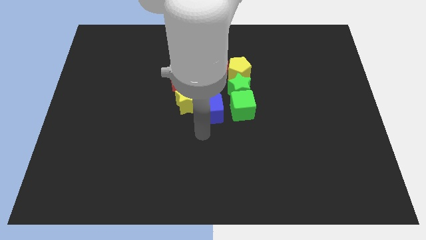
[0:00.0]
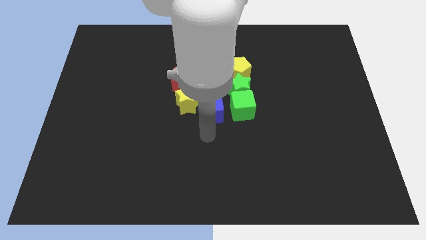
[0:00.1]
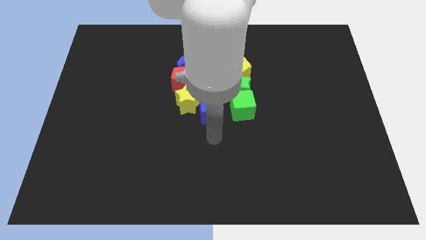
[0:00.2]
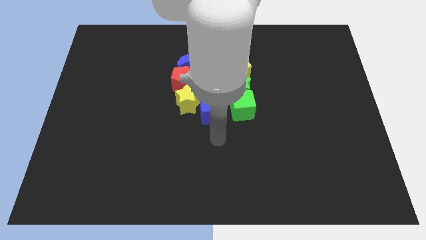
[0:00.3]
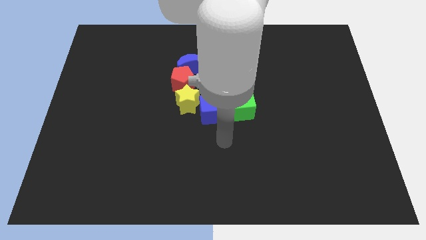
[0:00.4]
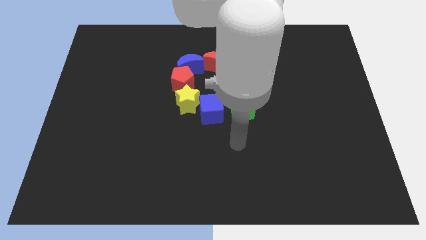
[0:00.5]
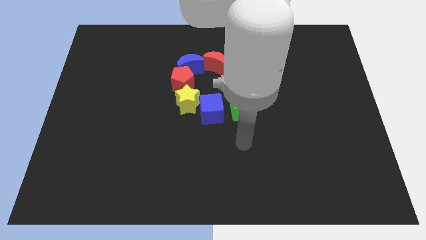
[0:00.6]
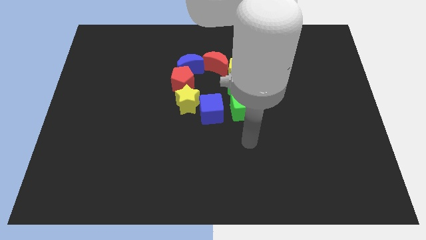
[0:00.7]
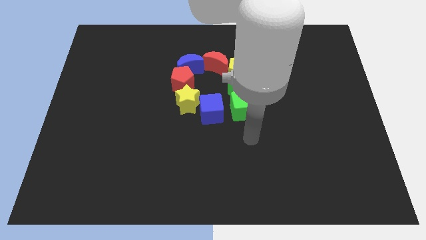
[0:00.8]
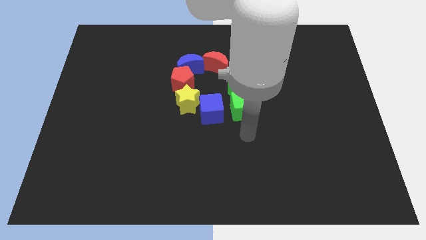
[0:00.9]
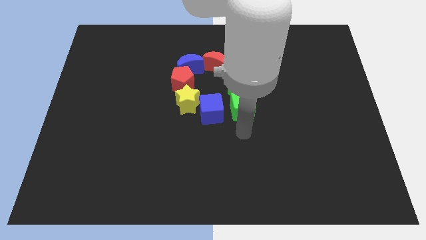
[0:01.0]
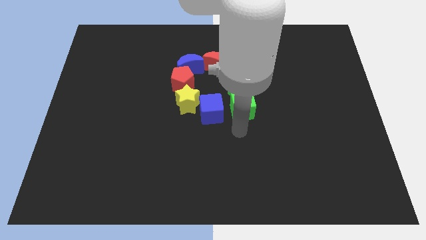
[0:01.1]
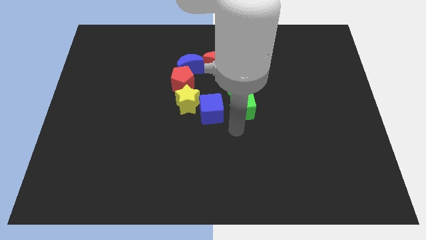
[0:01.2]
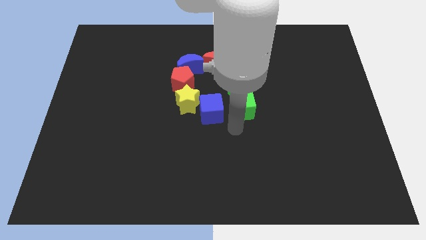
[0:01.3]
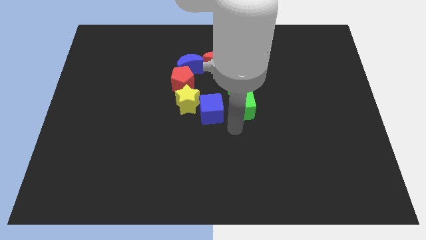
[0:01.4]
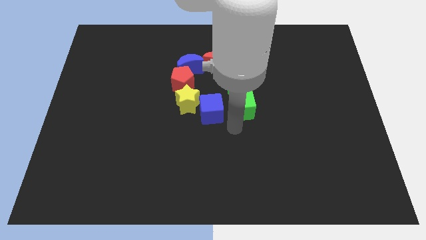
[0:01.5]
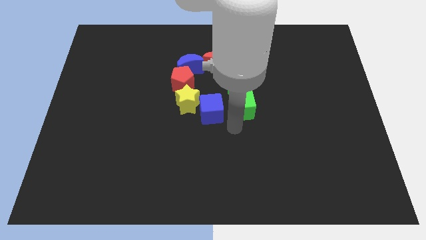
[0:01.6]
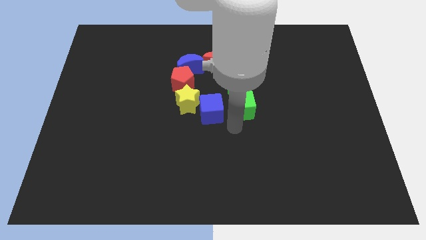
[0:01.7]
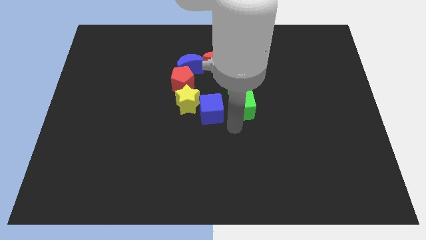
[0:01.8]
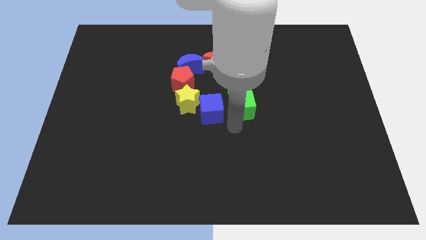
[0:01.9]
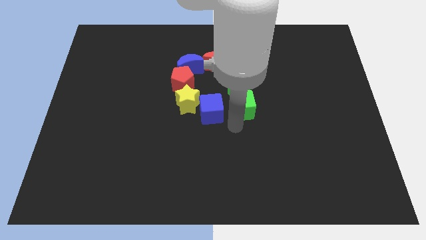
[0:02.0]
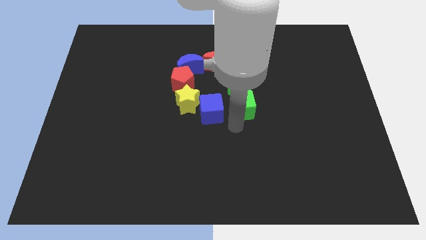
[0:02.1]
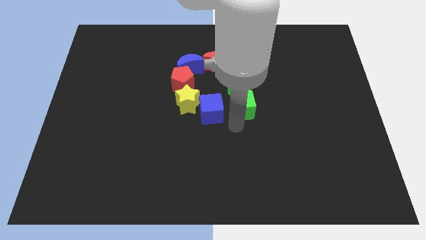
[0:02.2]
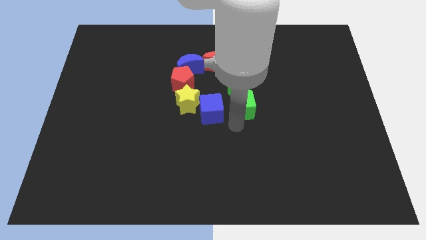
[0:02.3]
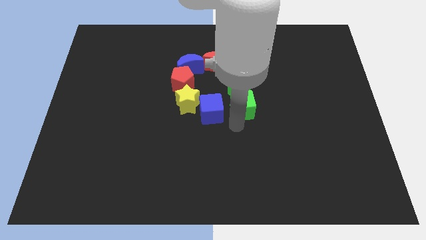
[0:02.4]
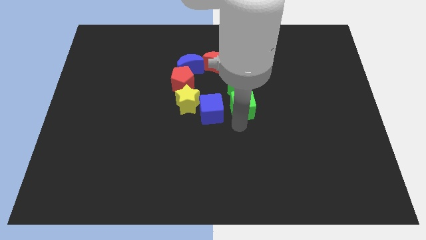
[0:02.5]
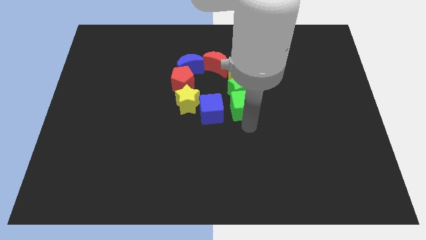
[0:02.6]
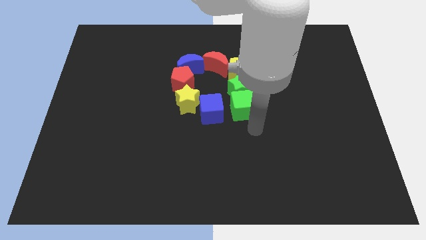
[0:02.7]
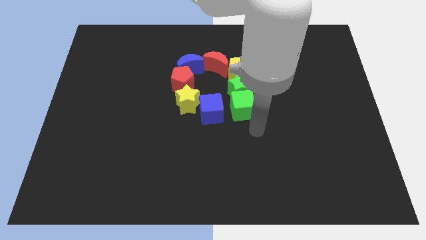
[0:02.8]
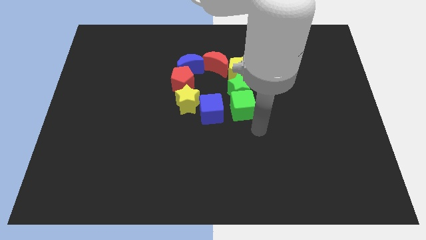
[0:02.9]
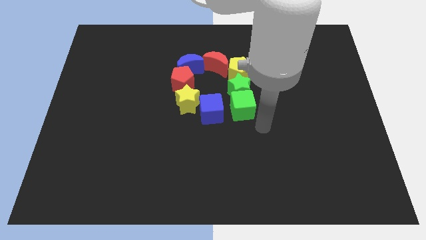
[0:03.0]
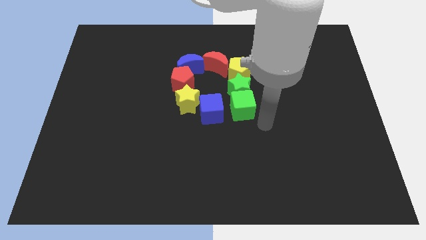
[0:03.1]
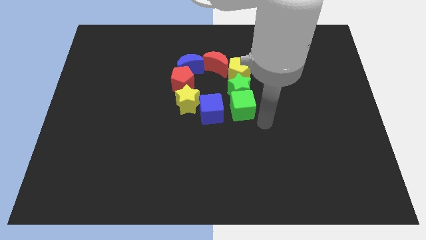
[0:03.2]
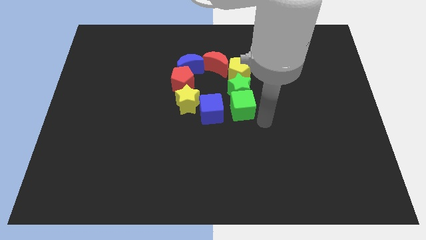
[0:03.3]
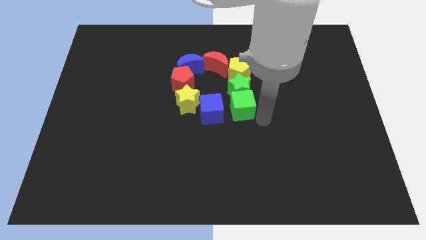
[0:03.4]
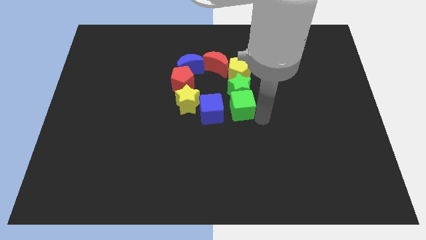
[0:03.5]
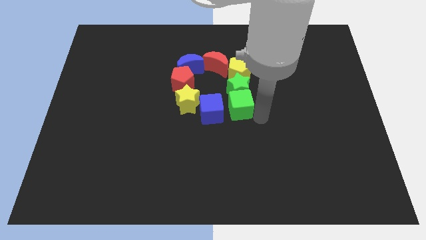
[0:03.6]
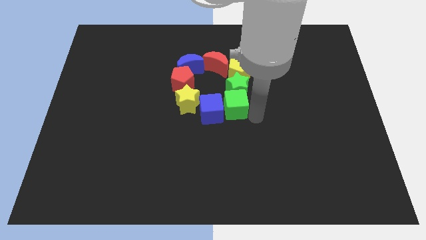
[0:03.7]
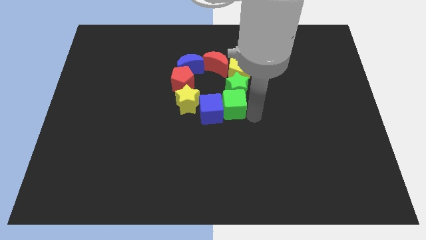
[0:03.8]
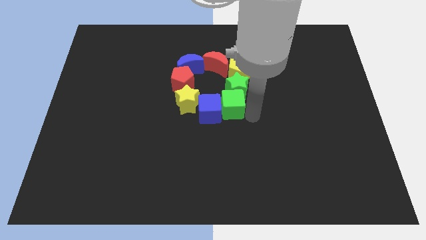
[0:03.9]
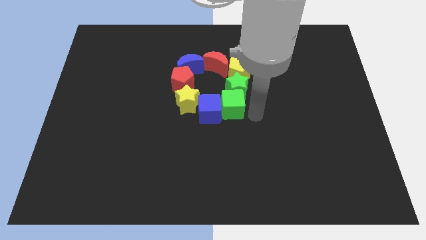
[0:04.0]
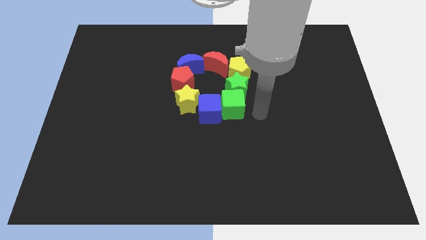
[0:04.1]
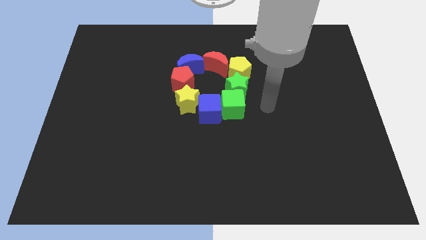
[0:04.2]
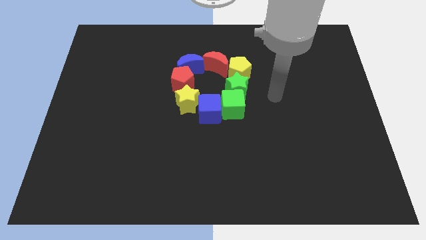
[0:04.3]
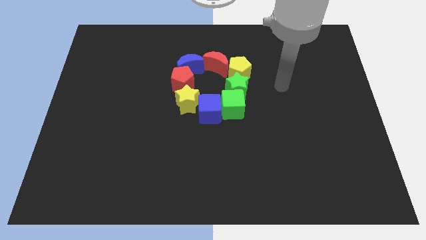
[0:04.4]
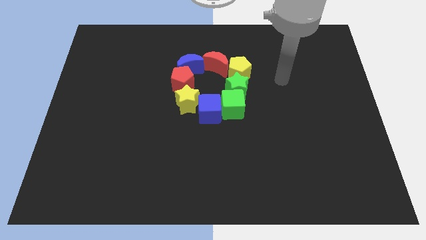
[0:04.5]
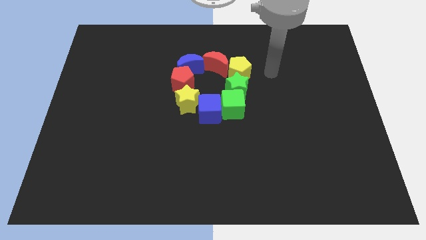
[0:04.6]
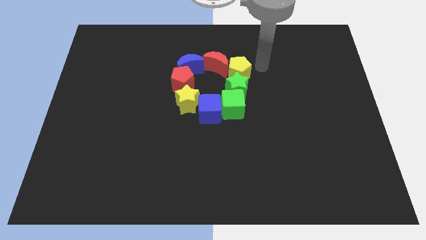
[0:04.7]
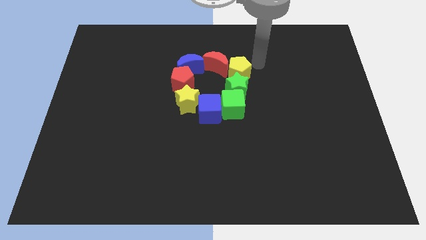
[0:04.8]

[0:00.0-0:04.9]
push the green cube into blue cube

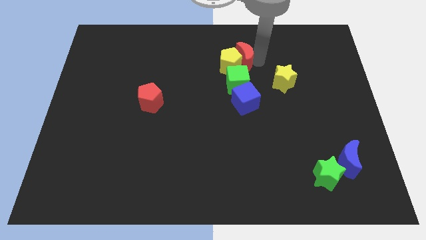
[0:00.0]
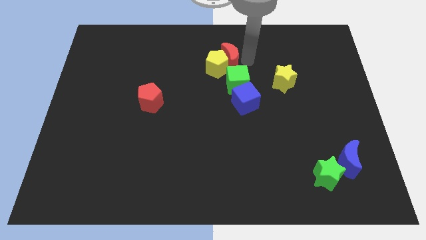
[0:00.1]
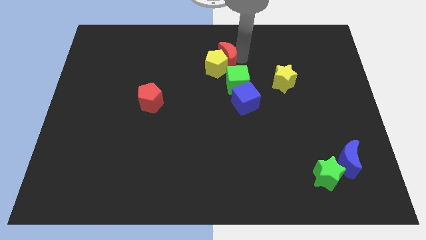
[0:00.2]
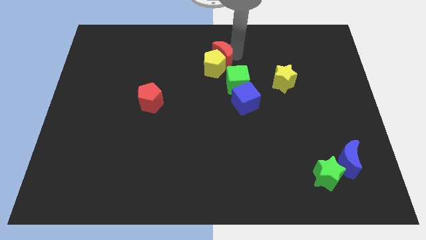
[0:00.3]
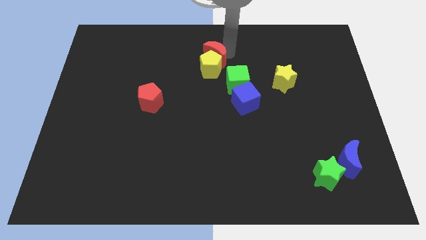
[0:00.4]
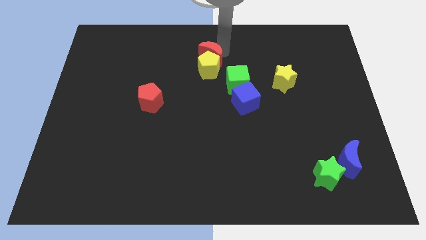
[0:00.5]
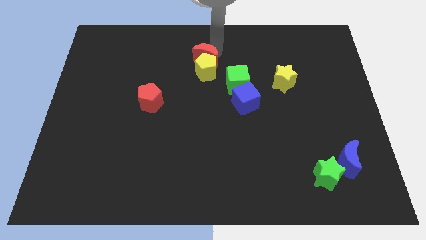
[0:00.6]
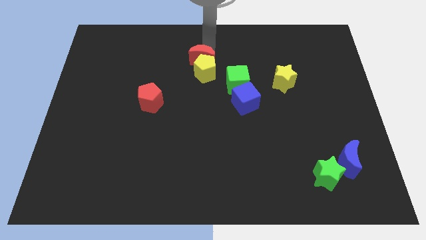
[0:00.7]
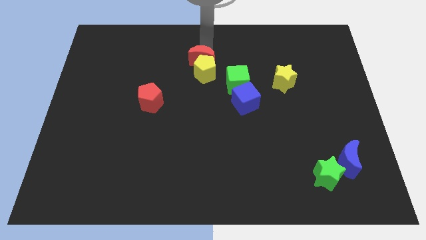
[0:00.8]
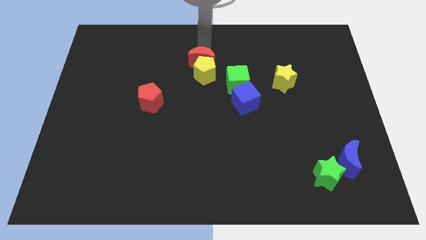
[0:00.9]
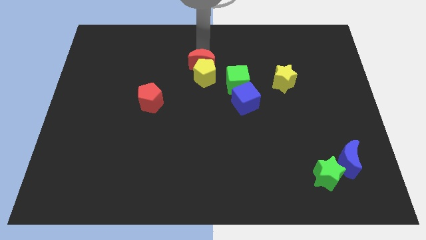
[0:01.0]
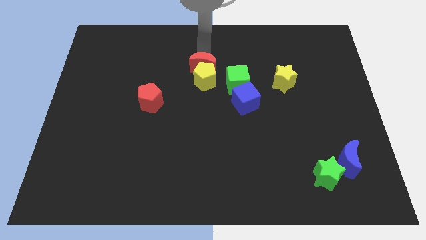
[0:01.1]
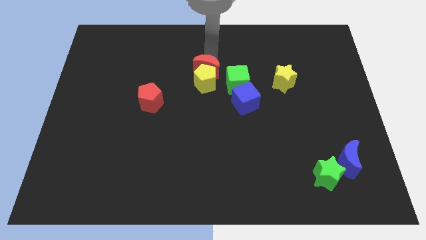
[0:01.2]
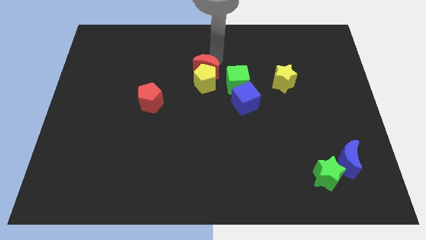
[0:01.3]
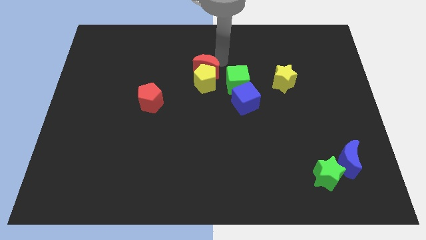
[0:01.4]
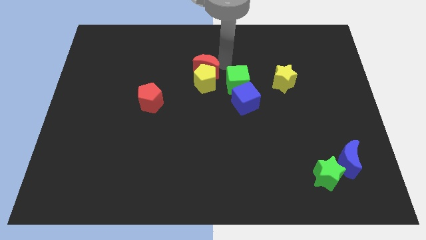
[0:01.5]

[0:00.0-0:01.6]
push the red crescent into the yellow pentagon towards the left

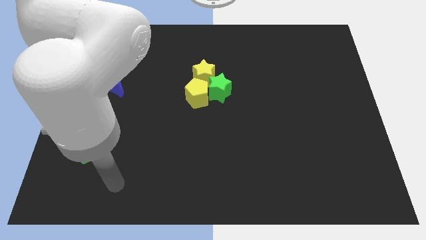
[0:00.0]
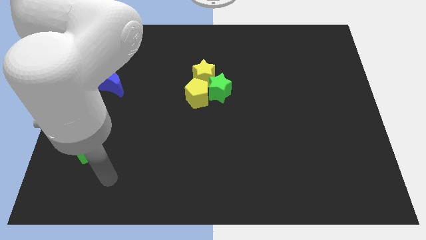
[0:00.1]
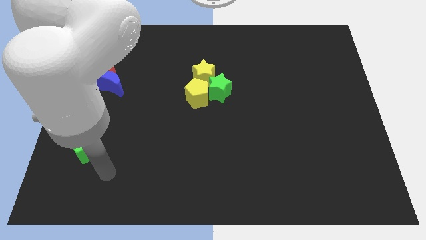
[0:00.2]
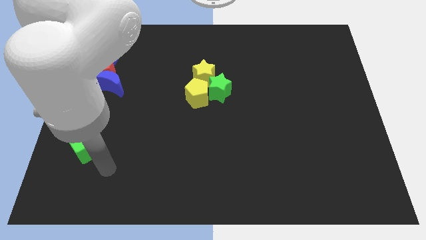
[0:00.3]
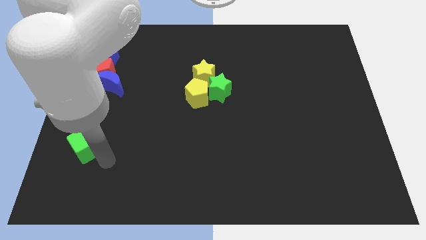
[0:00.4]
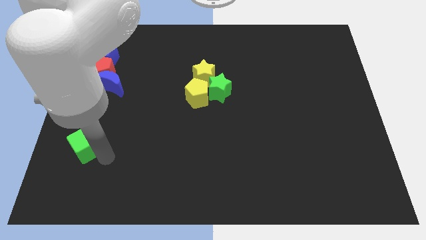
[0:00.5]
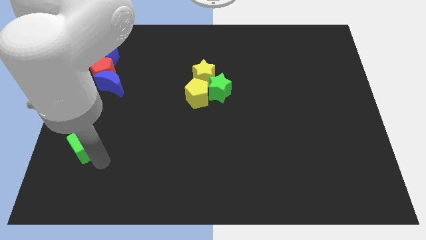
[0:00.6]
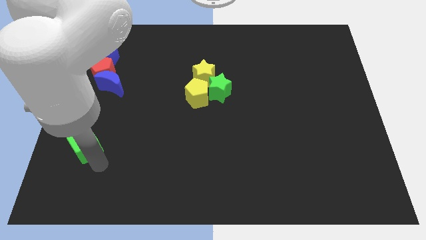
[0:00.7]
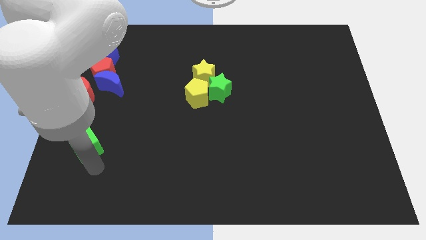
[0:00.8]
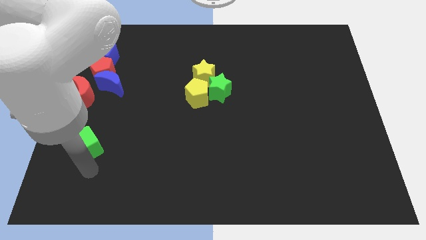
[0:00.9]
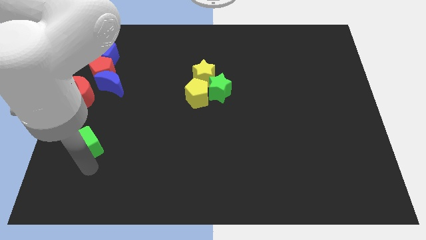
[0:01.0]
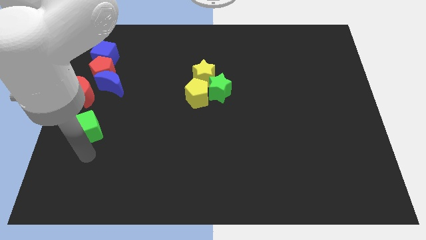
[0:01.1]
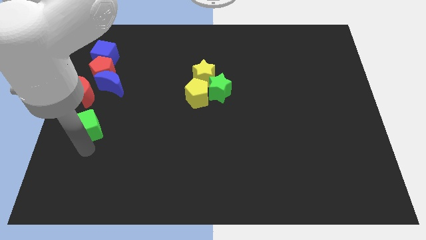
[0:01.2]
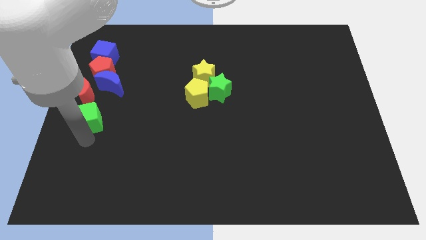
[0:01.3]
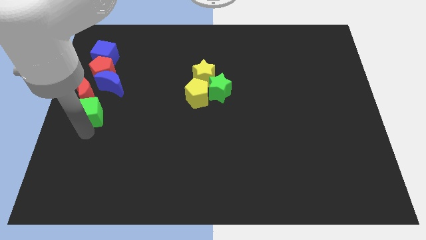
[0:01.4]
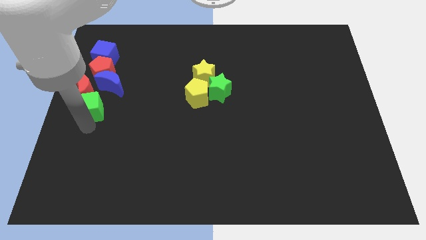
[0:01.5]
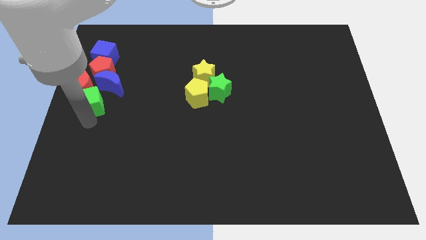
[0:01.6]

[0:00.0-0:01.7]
push the green cube into the bottom side of the red crescent

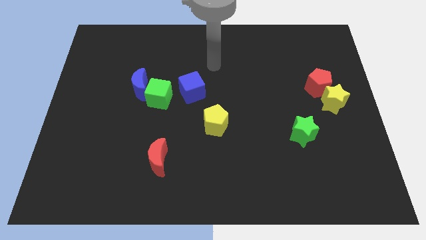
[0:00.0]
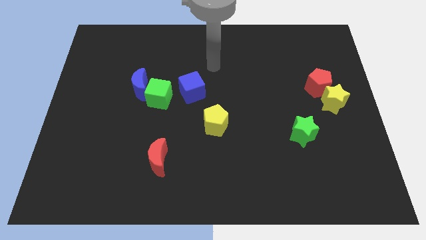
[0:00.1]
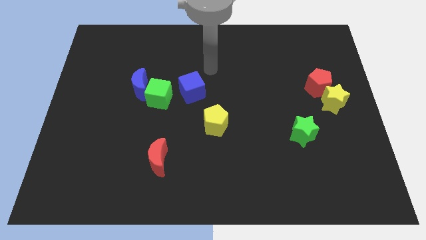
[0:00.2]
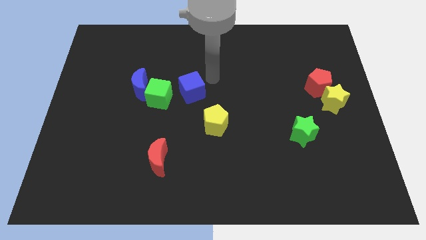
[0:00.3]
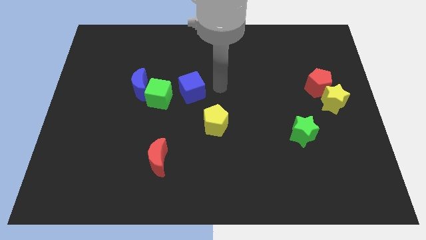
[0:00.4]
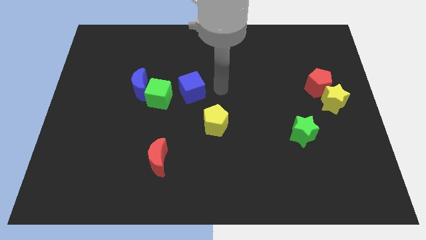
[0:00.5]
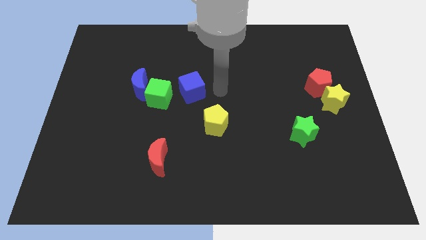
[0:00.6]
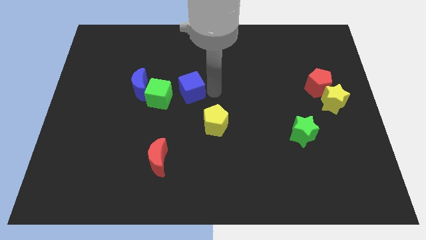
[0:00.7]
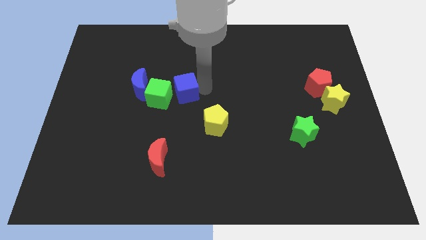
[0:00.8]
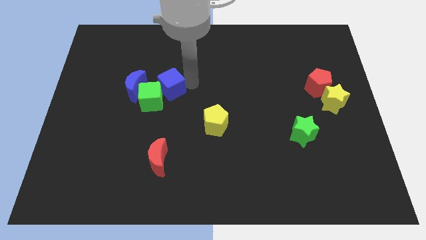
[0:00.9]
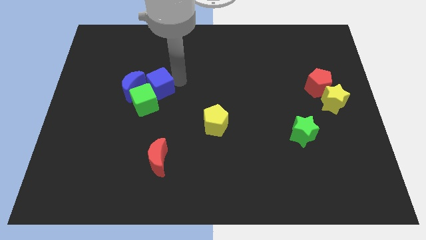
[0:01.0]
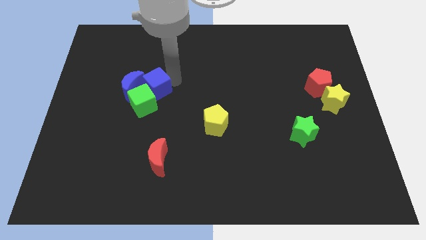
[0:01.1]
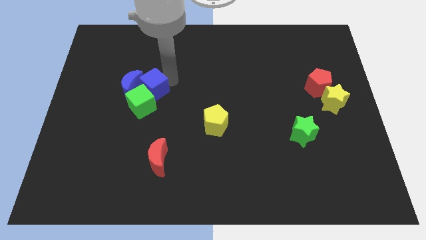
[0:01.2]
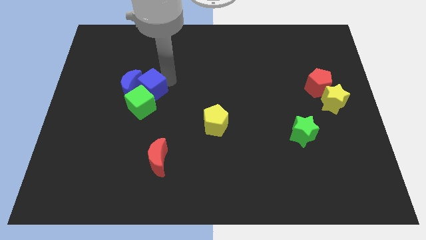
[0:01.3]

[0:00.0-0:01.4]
push the blue blocks and green cube towards the left side of the board
